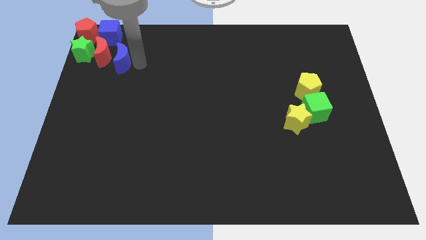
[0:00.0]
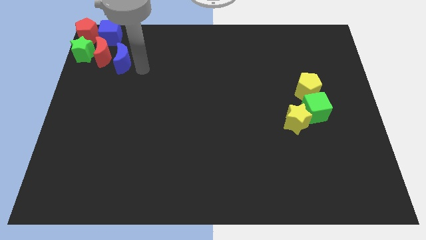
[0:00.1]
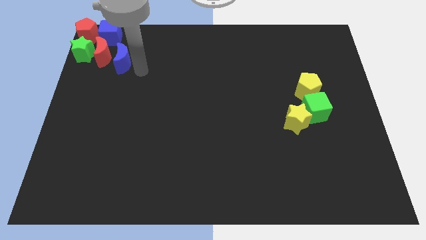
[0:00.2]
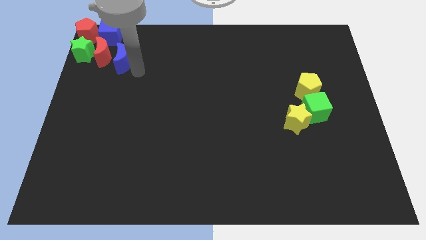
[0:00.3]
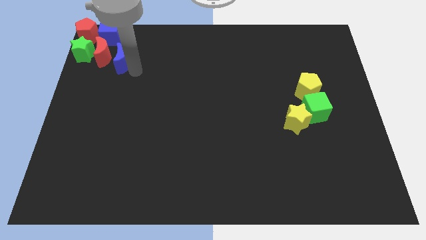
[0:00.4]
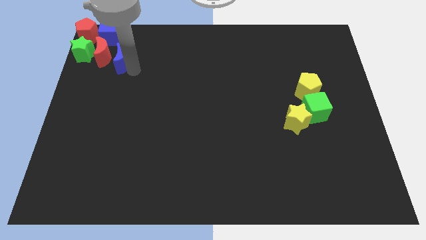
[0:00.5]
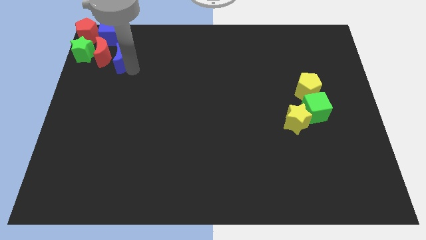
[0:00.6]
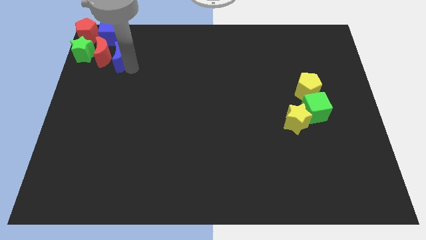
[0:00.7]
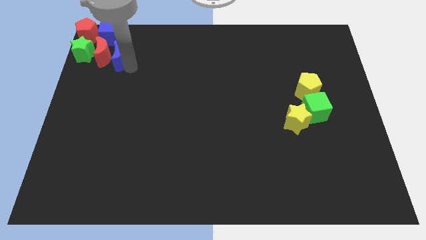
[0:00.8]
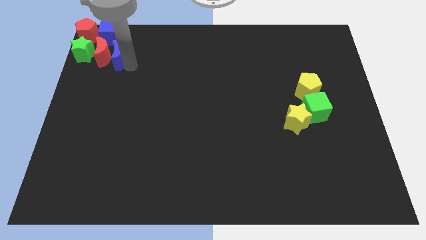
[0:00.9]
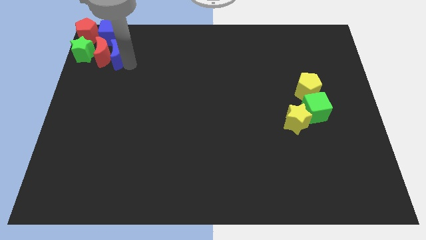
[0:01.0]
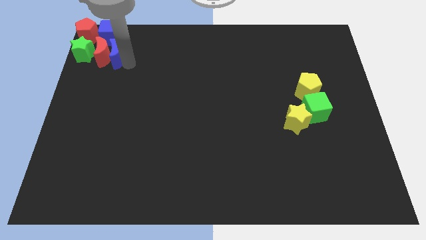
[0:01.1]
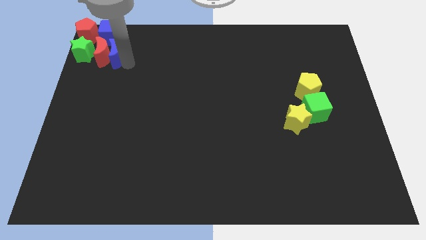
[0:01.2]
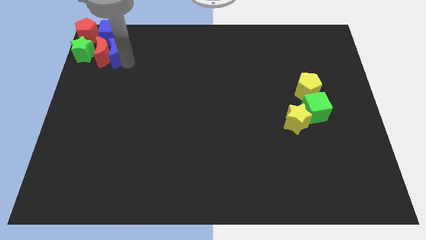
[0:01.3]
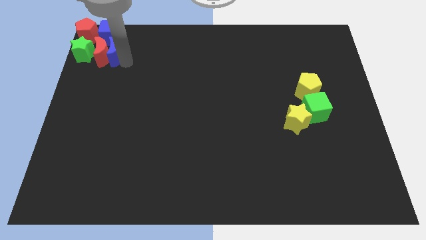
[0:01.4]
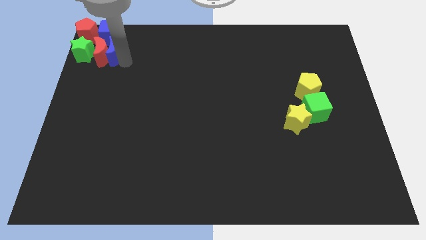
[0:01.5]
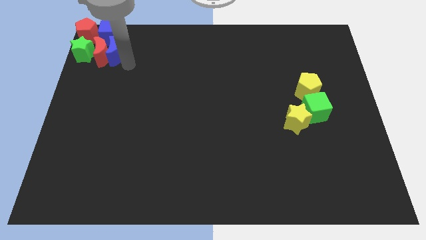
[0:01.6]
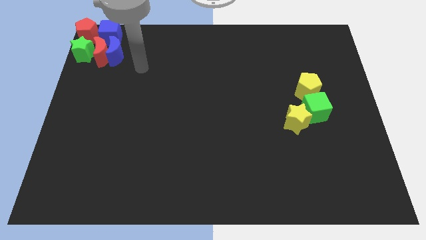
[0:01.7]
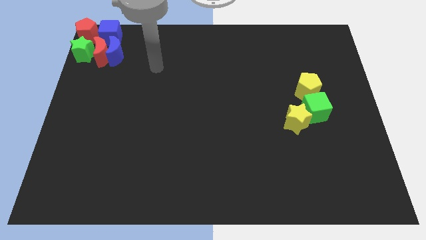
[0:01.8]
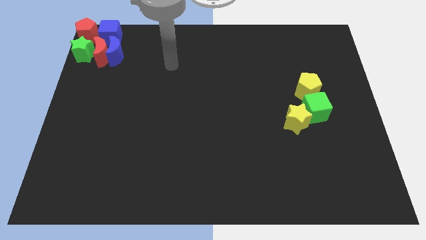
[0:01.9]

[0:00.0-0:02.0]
place the blue moon to the right side of the red moon

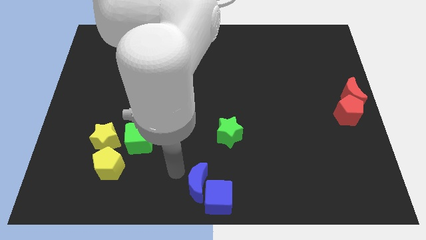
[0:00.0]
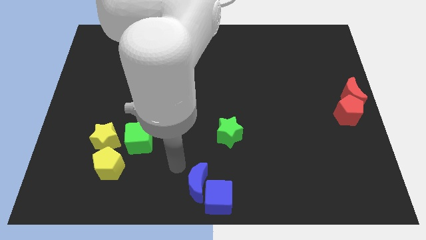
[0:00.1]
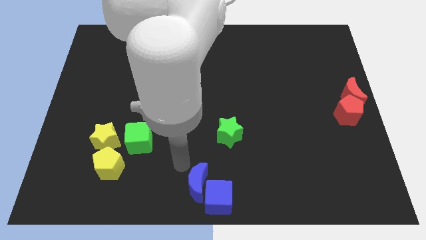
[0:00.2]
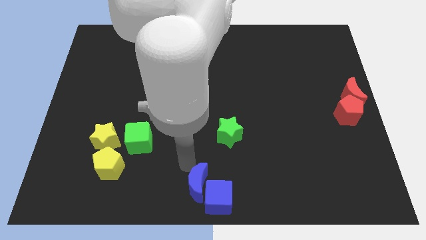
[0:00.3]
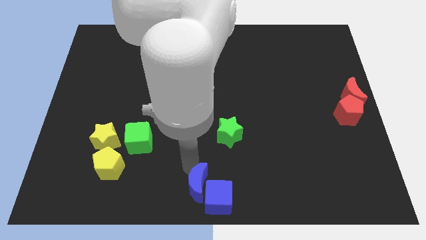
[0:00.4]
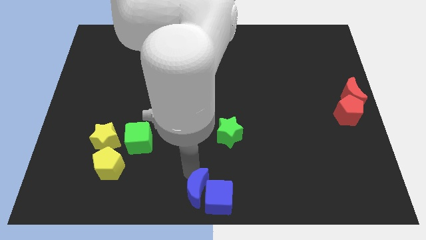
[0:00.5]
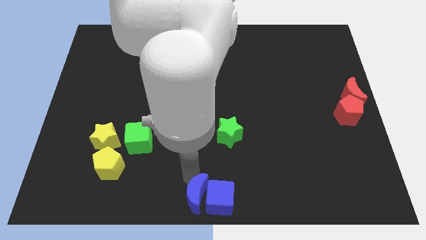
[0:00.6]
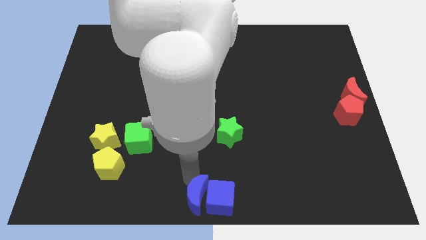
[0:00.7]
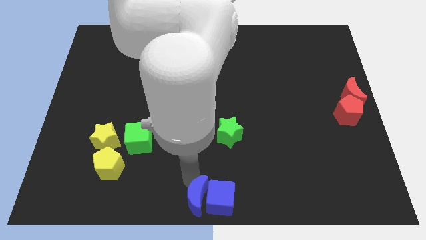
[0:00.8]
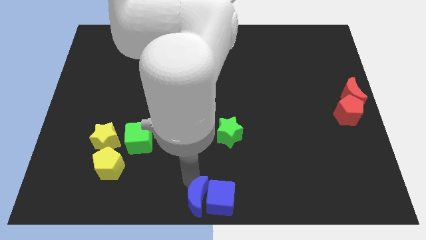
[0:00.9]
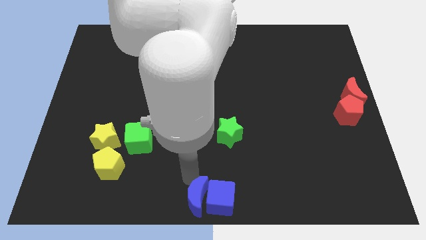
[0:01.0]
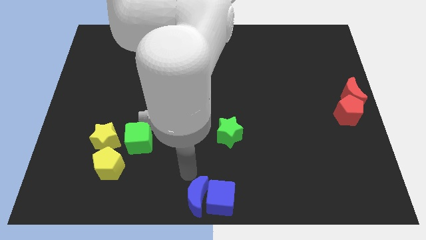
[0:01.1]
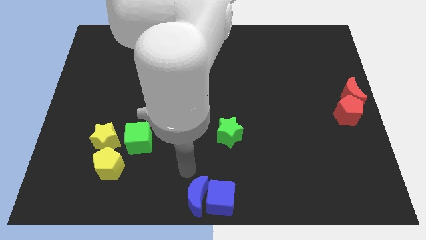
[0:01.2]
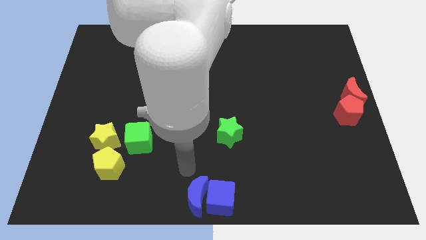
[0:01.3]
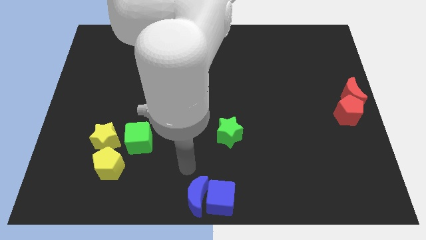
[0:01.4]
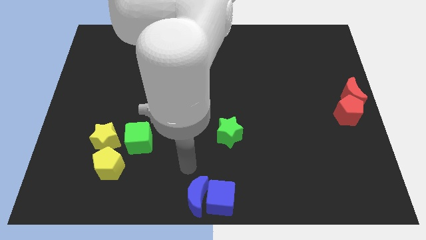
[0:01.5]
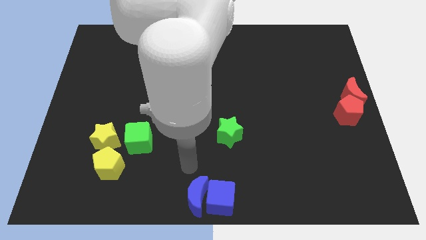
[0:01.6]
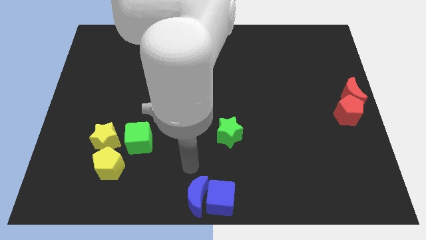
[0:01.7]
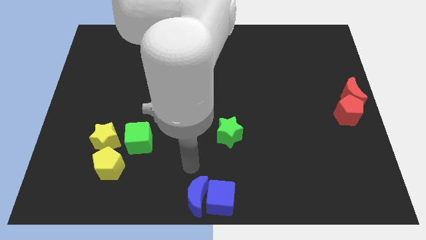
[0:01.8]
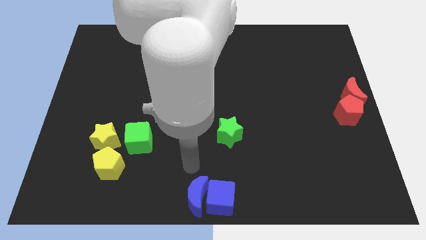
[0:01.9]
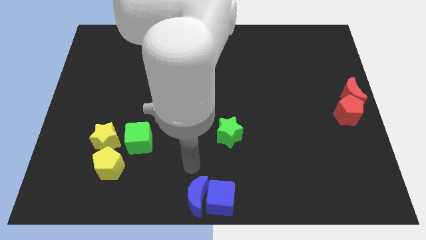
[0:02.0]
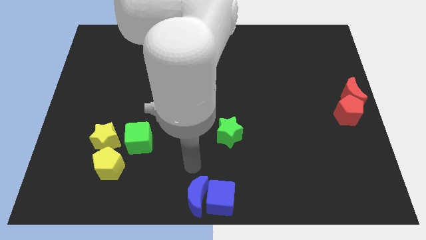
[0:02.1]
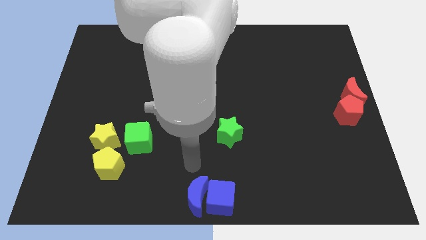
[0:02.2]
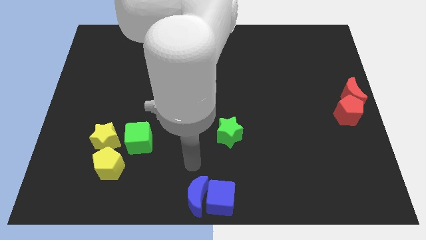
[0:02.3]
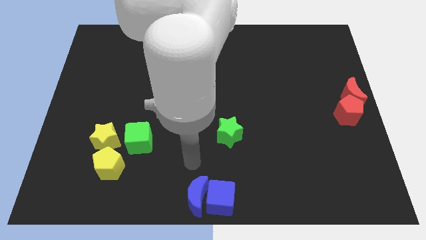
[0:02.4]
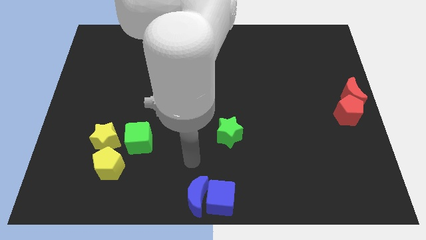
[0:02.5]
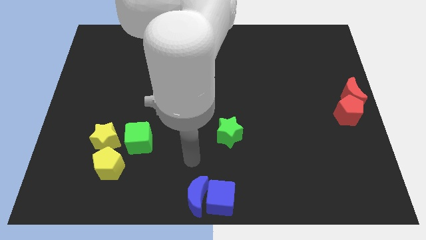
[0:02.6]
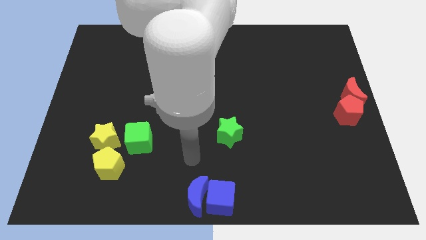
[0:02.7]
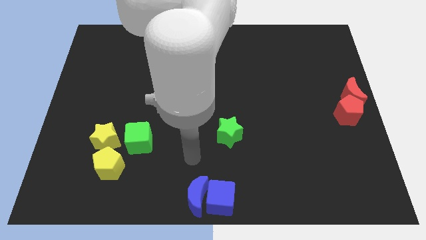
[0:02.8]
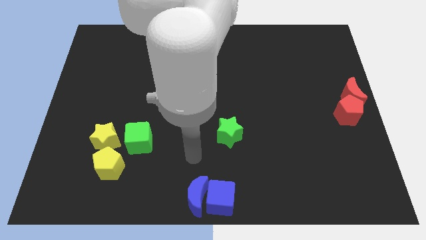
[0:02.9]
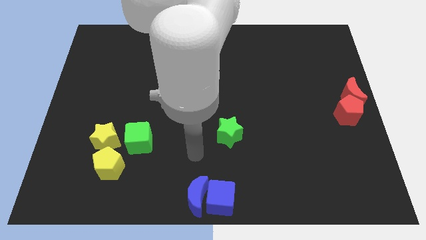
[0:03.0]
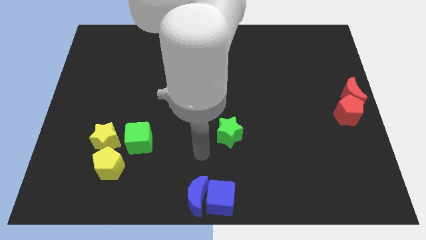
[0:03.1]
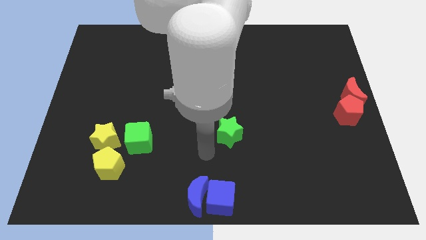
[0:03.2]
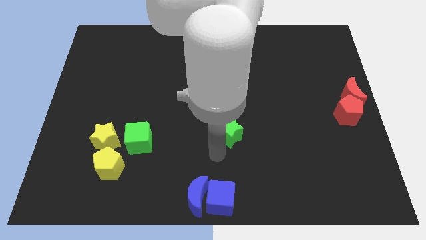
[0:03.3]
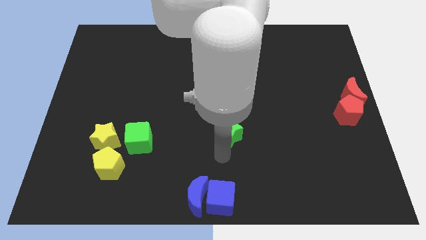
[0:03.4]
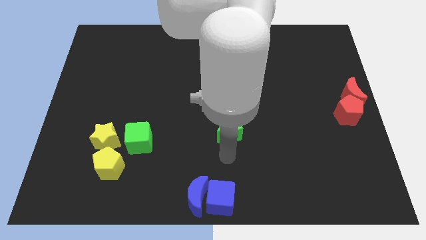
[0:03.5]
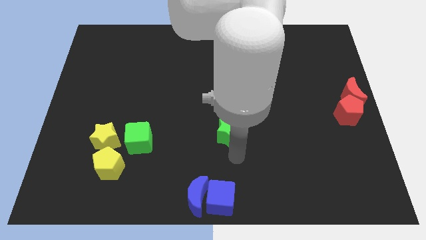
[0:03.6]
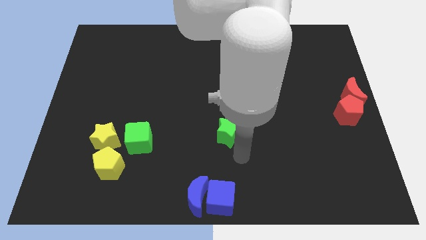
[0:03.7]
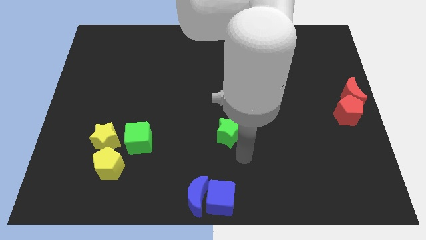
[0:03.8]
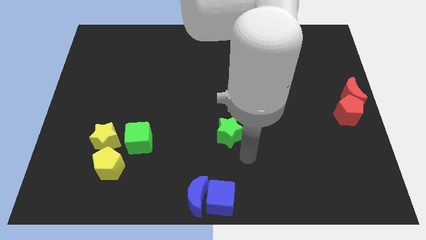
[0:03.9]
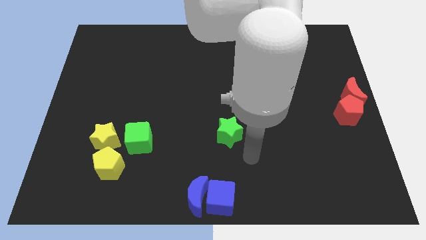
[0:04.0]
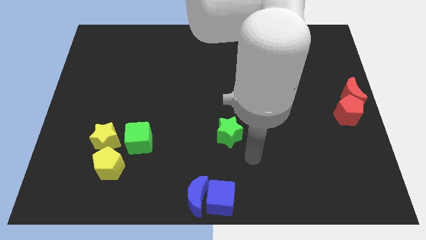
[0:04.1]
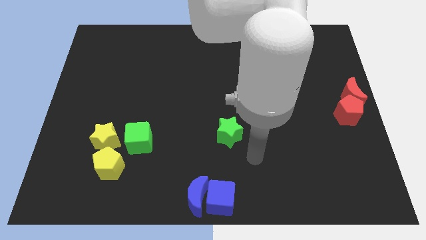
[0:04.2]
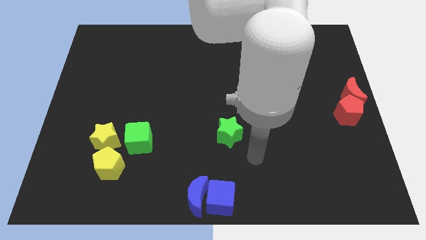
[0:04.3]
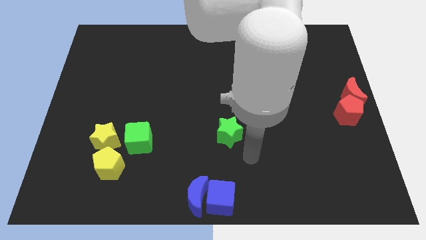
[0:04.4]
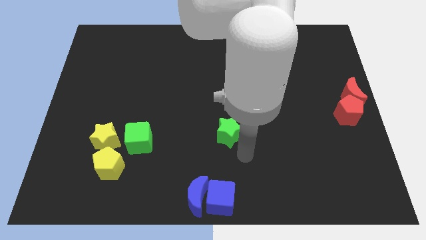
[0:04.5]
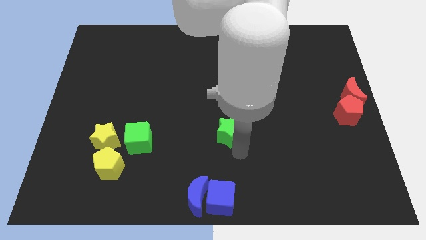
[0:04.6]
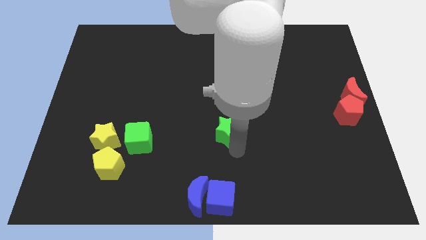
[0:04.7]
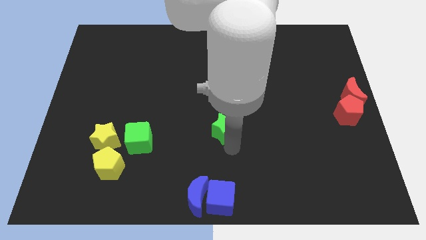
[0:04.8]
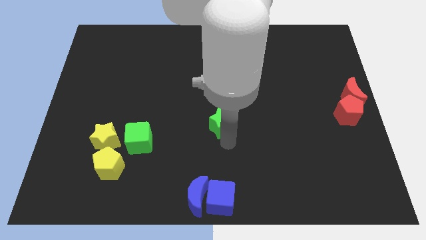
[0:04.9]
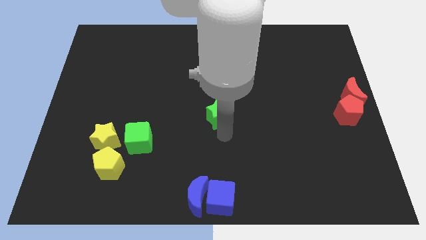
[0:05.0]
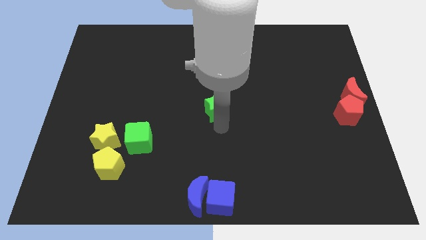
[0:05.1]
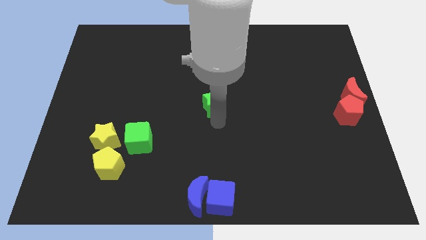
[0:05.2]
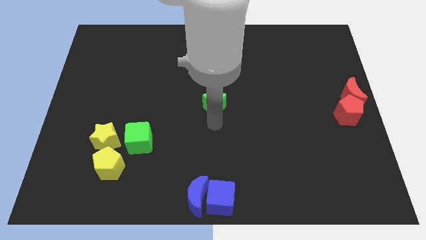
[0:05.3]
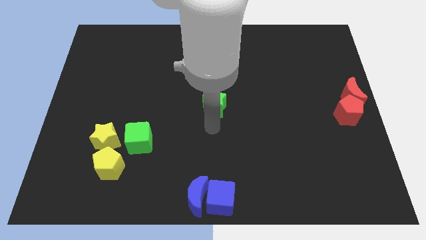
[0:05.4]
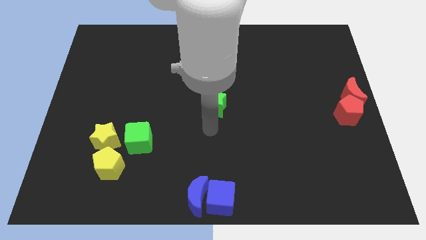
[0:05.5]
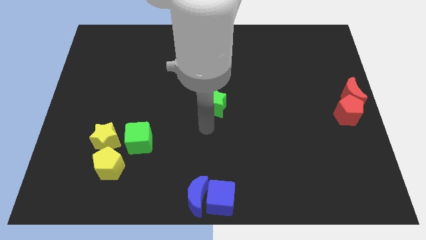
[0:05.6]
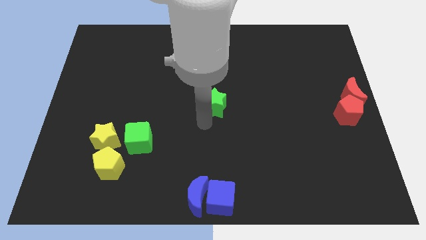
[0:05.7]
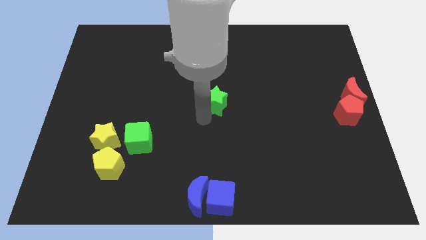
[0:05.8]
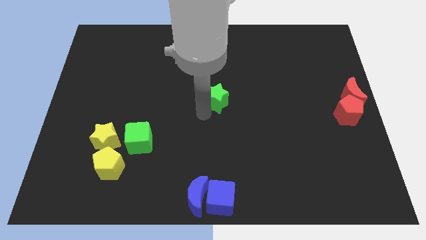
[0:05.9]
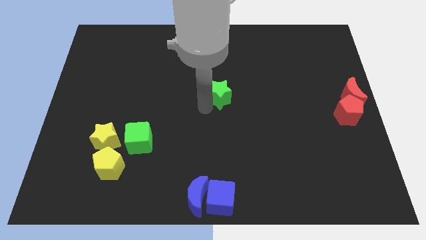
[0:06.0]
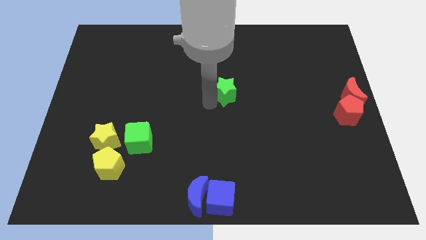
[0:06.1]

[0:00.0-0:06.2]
push green star towards middle of the board

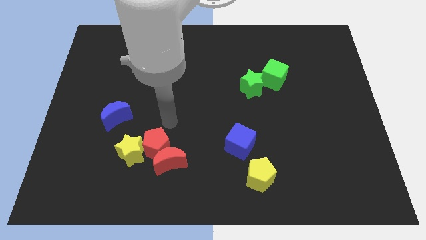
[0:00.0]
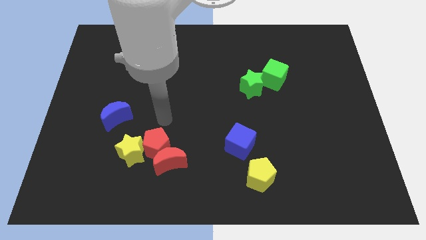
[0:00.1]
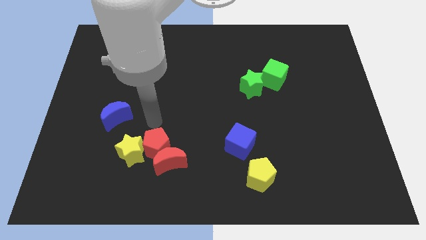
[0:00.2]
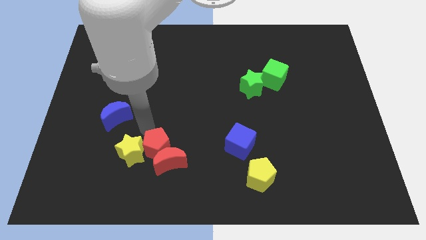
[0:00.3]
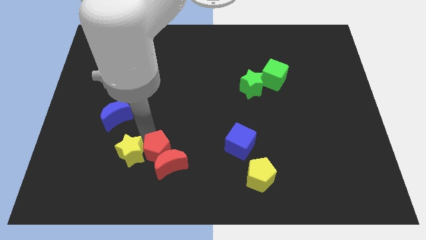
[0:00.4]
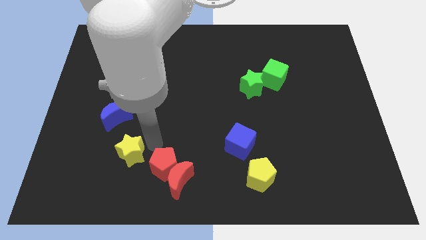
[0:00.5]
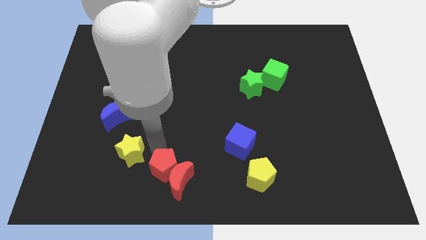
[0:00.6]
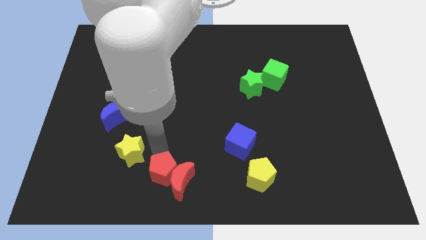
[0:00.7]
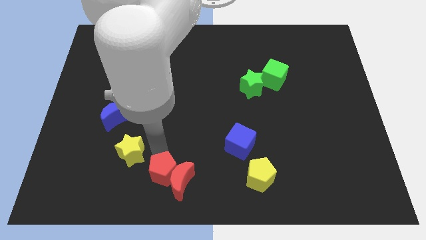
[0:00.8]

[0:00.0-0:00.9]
push the red blocks towards bottom
